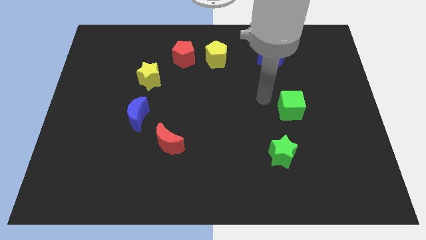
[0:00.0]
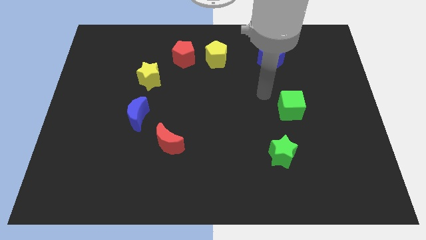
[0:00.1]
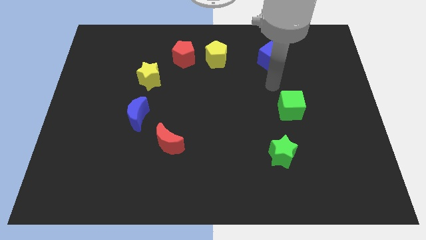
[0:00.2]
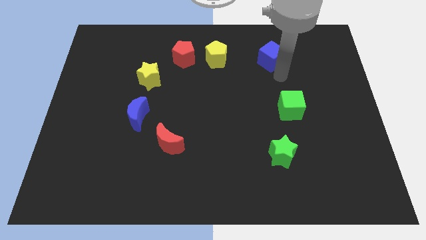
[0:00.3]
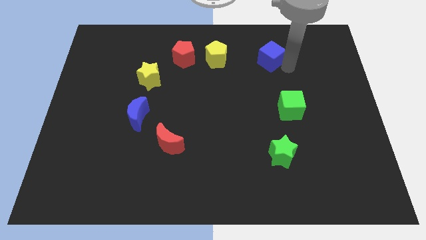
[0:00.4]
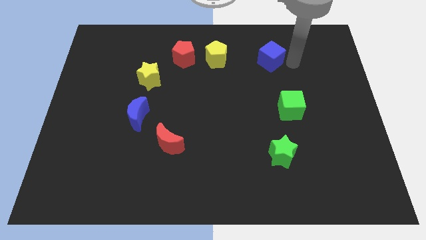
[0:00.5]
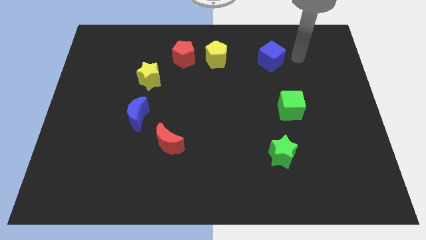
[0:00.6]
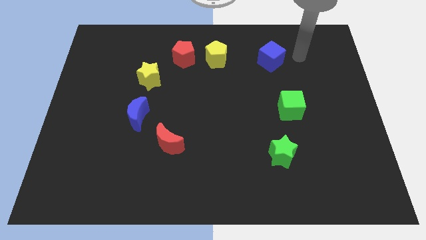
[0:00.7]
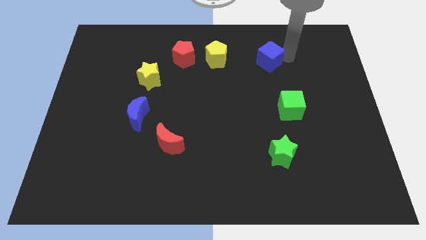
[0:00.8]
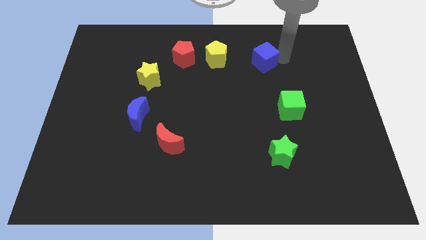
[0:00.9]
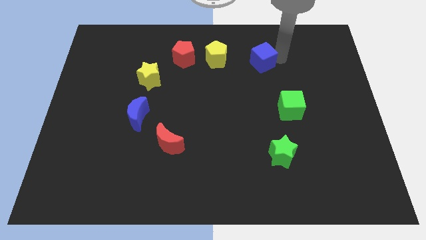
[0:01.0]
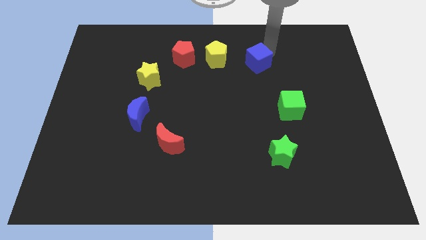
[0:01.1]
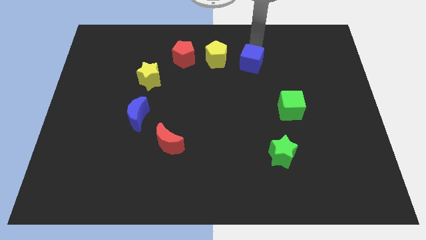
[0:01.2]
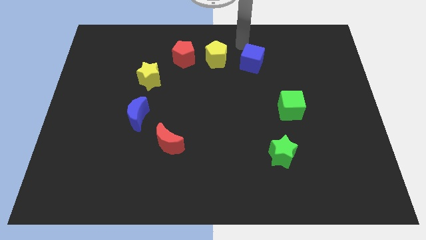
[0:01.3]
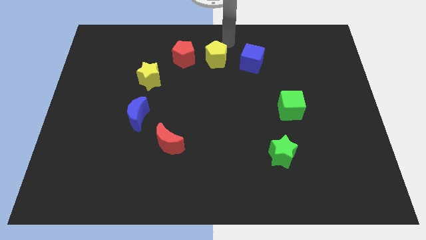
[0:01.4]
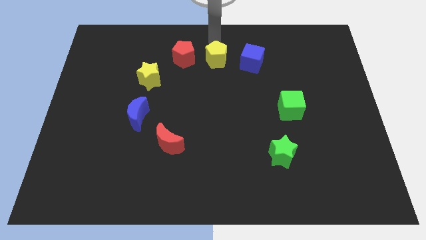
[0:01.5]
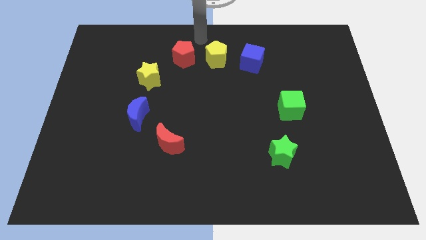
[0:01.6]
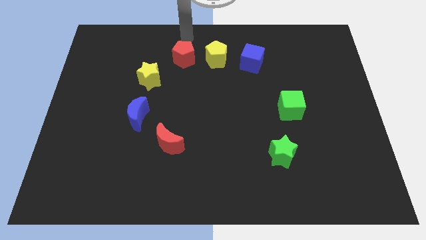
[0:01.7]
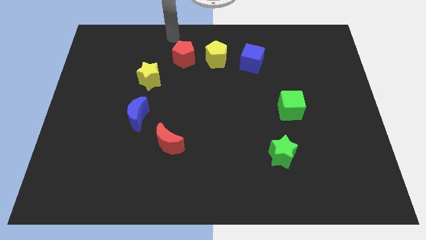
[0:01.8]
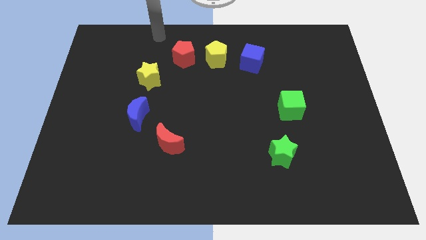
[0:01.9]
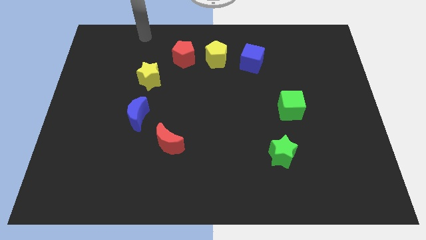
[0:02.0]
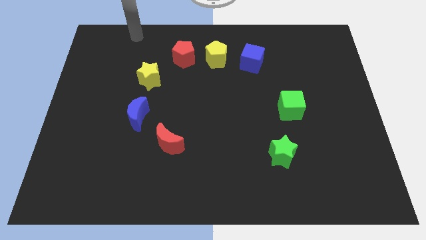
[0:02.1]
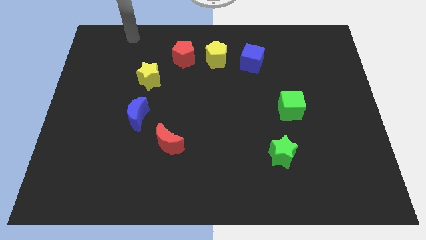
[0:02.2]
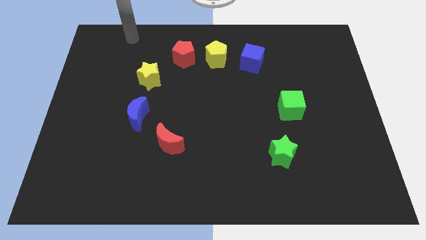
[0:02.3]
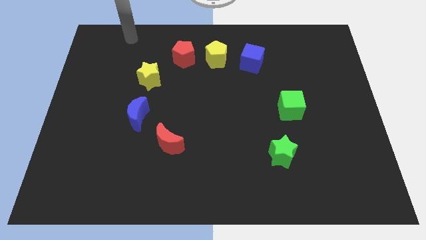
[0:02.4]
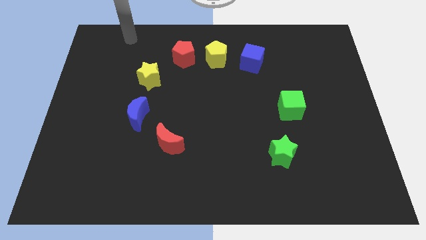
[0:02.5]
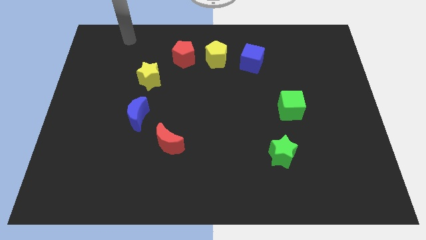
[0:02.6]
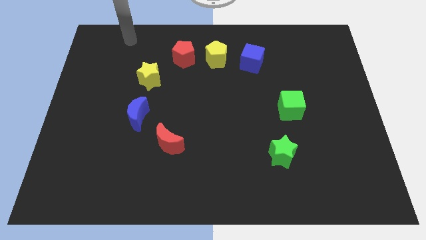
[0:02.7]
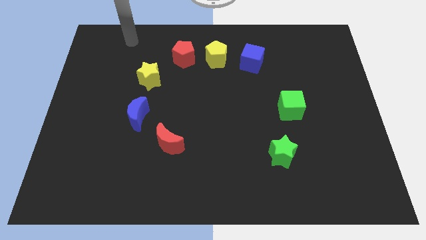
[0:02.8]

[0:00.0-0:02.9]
slightly push the blue cube towards the yellow pentagon and move away

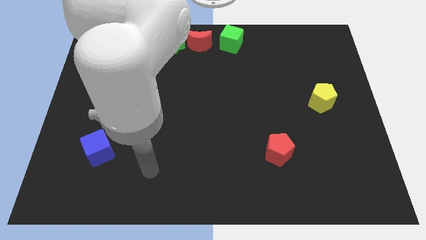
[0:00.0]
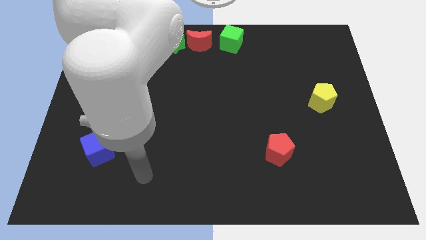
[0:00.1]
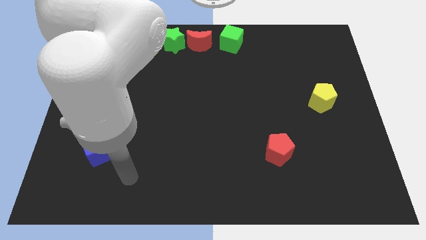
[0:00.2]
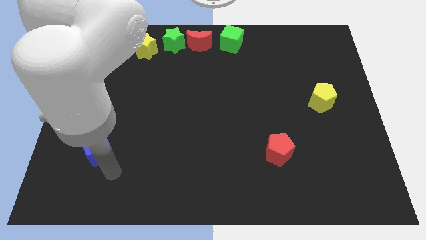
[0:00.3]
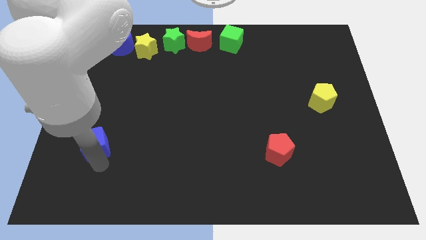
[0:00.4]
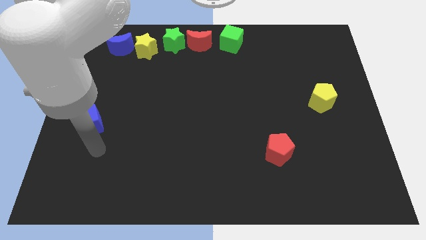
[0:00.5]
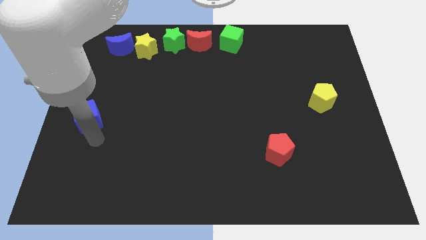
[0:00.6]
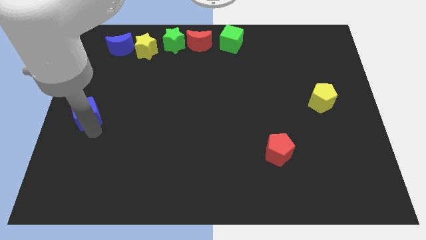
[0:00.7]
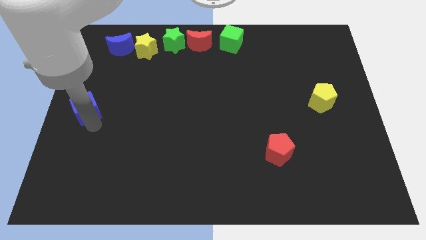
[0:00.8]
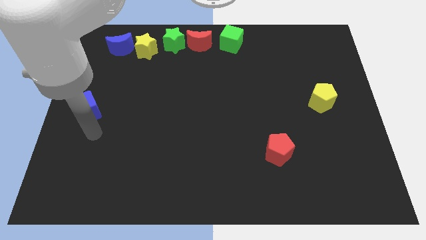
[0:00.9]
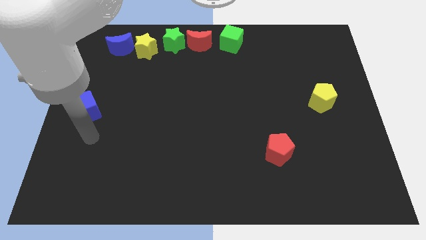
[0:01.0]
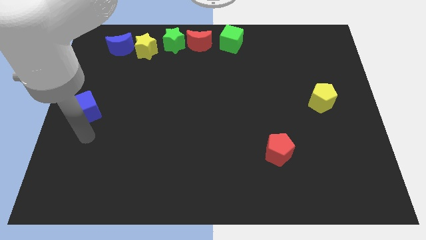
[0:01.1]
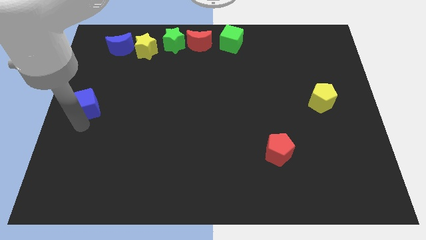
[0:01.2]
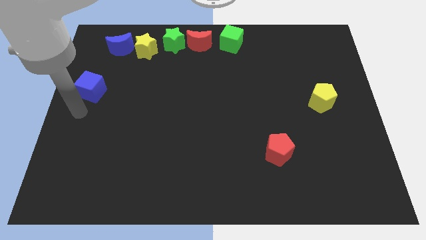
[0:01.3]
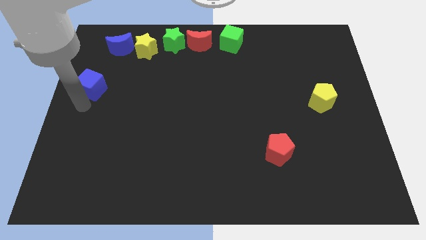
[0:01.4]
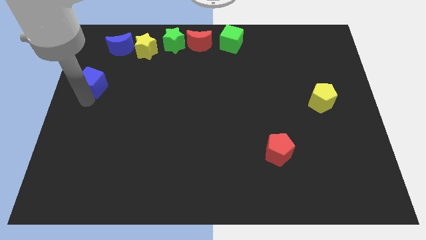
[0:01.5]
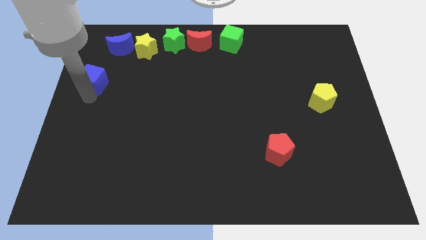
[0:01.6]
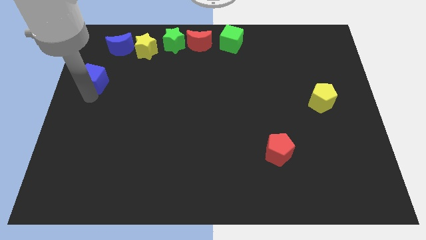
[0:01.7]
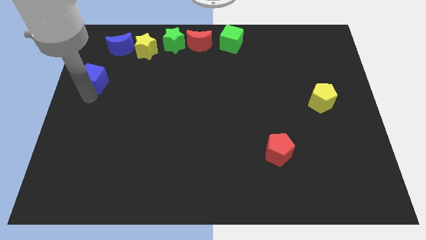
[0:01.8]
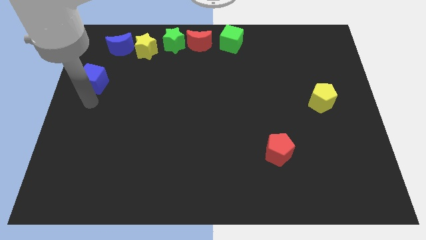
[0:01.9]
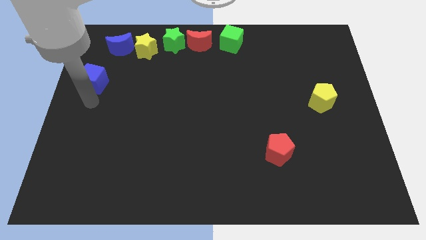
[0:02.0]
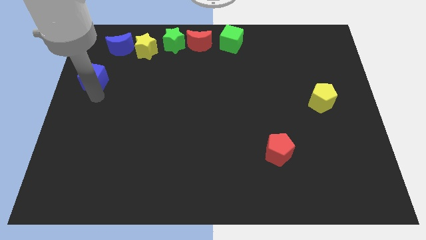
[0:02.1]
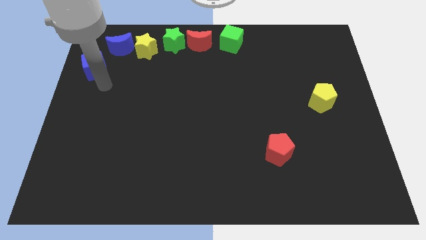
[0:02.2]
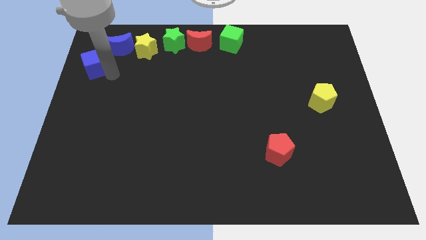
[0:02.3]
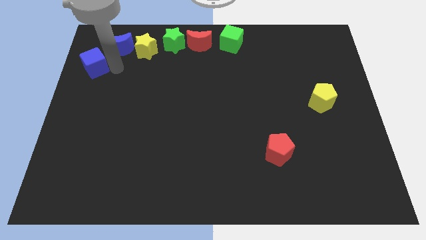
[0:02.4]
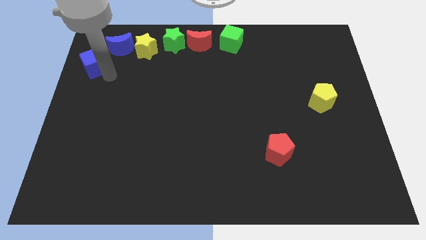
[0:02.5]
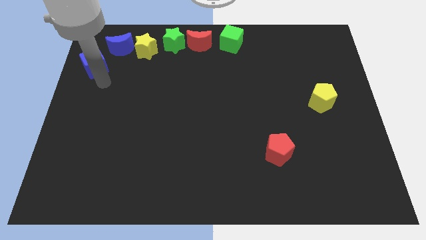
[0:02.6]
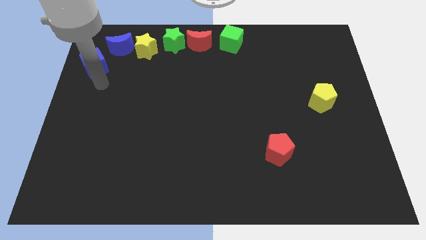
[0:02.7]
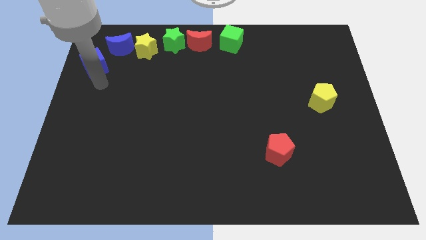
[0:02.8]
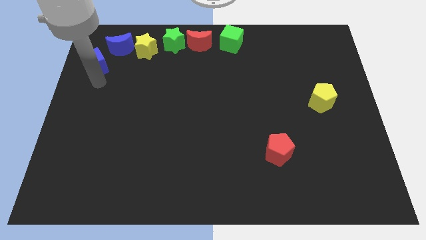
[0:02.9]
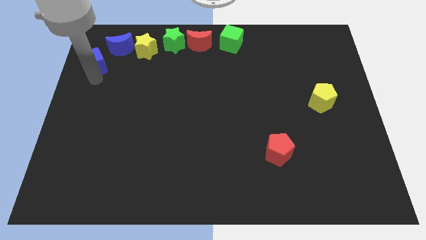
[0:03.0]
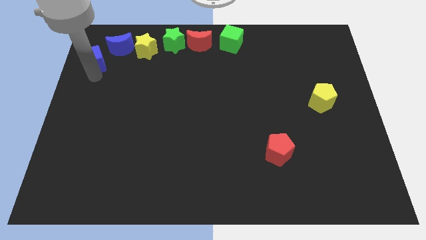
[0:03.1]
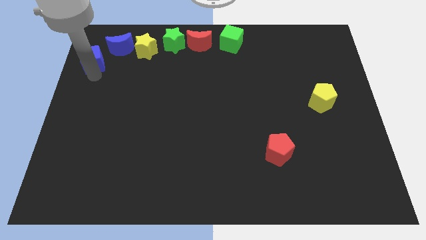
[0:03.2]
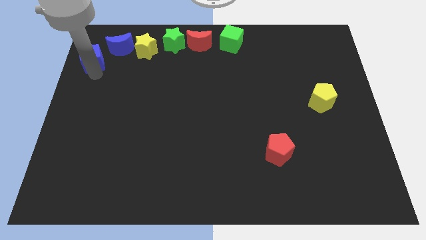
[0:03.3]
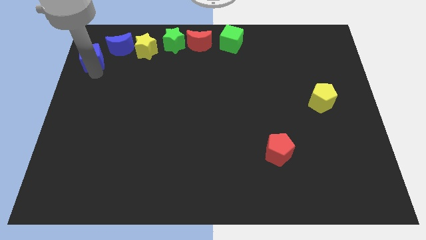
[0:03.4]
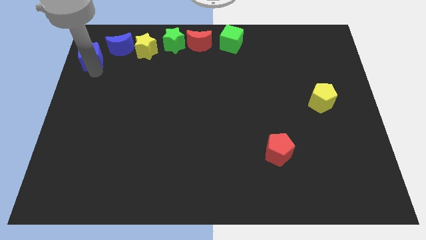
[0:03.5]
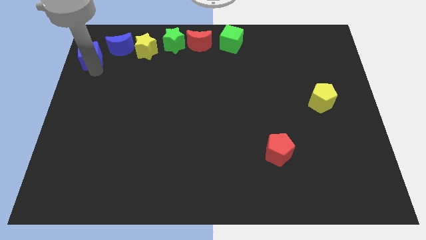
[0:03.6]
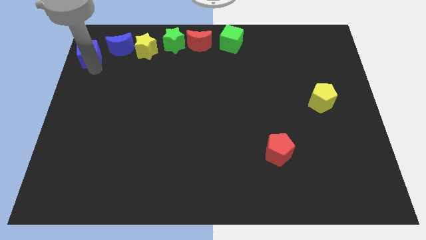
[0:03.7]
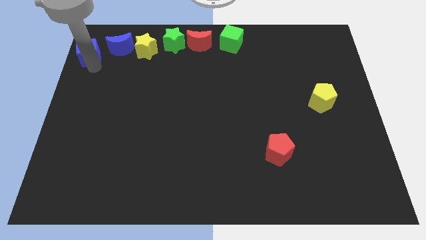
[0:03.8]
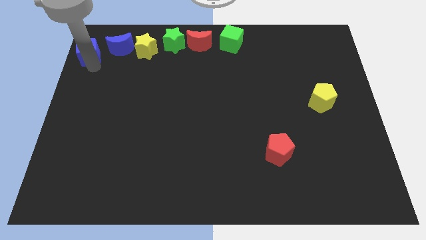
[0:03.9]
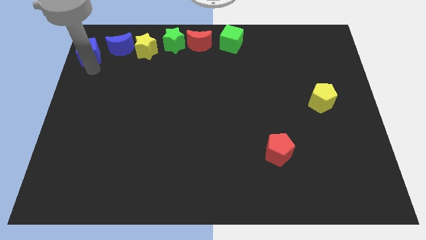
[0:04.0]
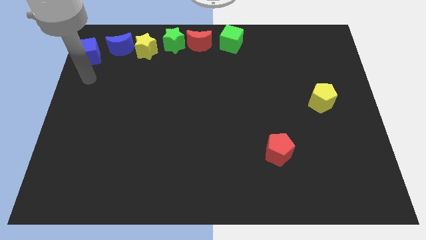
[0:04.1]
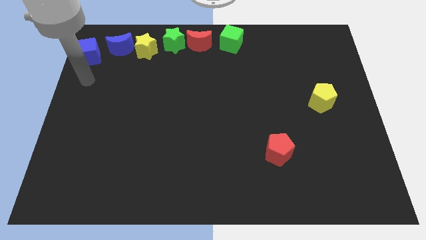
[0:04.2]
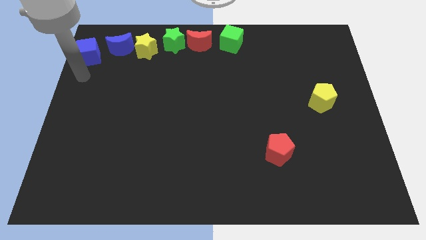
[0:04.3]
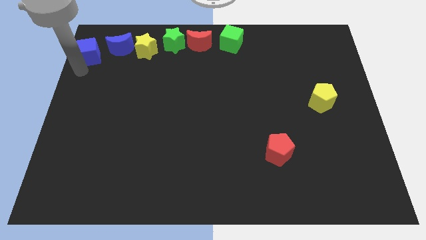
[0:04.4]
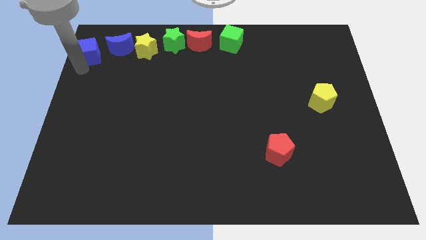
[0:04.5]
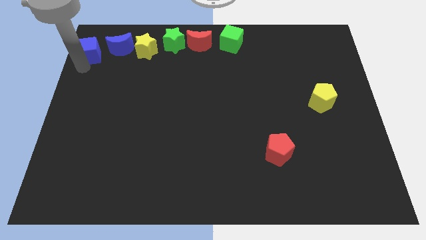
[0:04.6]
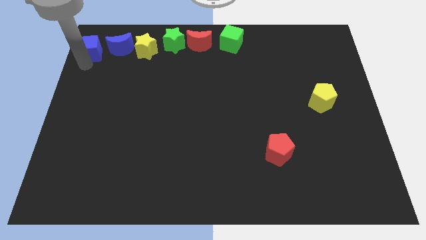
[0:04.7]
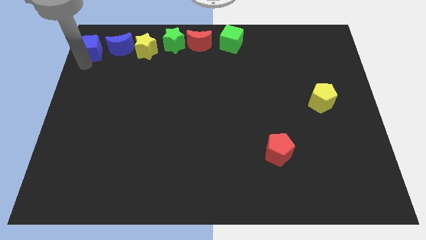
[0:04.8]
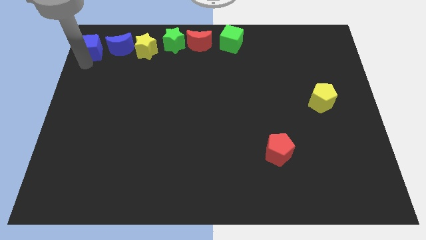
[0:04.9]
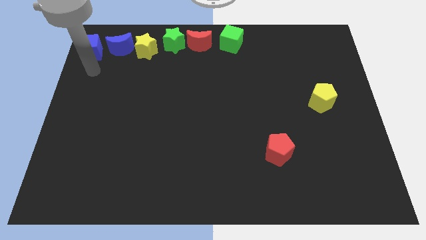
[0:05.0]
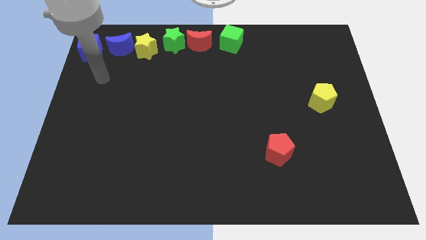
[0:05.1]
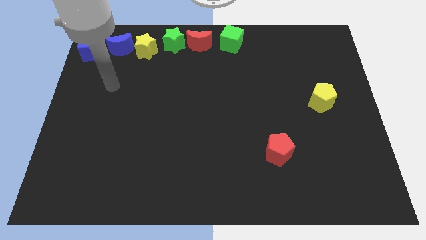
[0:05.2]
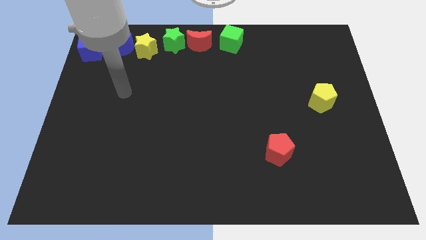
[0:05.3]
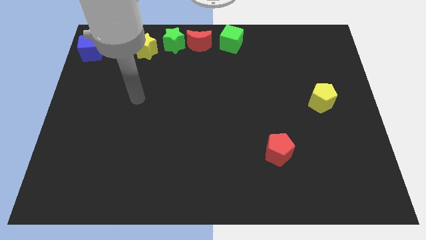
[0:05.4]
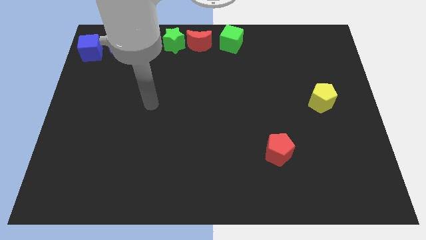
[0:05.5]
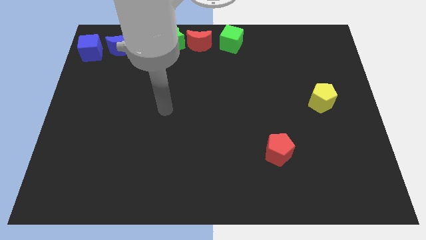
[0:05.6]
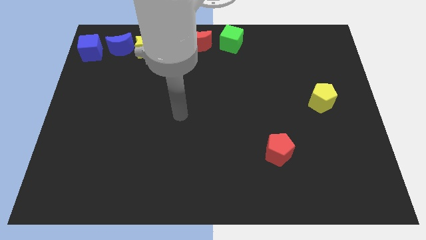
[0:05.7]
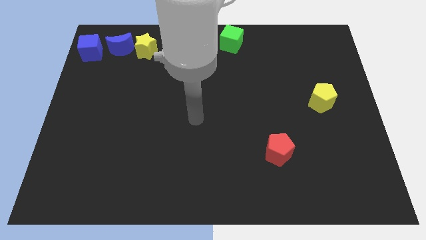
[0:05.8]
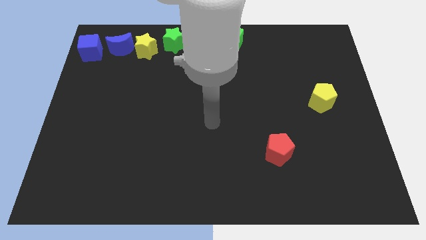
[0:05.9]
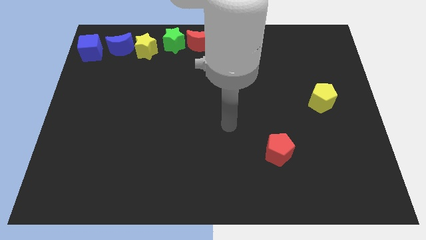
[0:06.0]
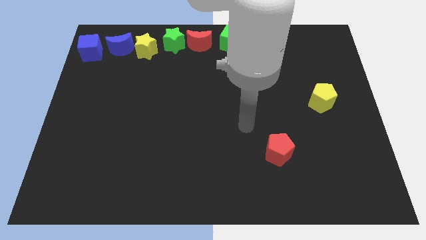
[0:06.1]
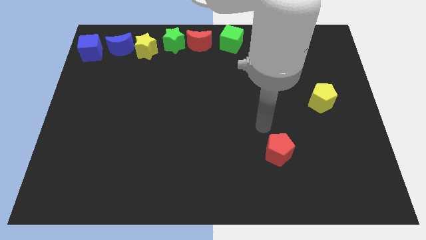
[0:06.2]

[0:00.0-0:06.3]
place the blue cube to the left of the blue moon
